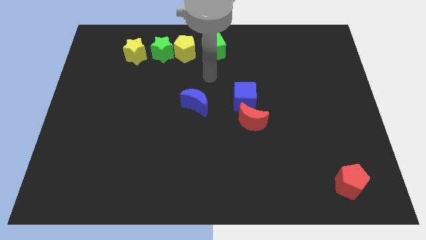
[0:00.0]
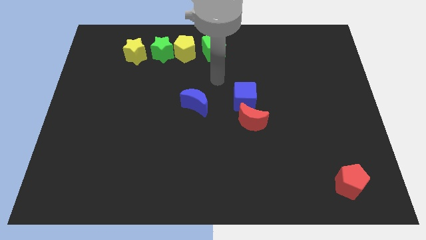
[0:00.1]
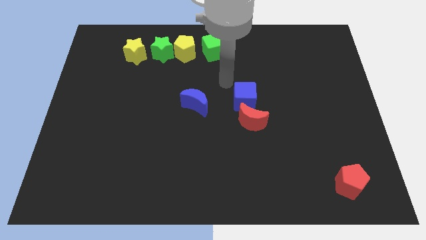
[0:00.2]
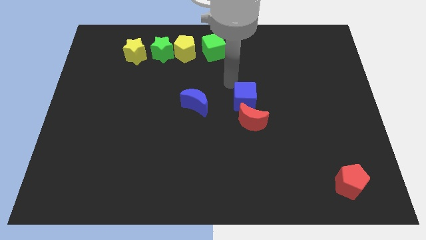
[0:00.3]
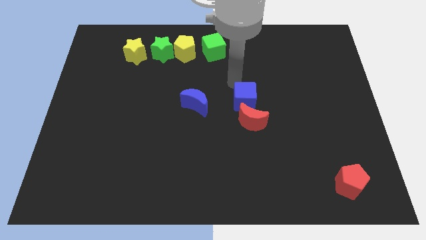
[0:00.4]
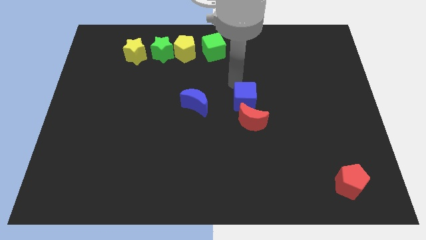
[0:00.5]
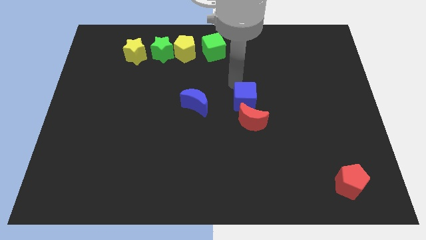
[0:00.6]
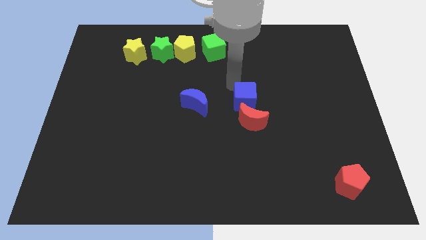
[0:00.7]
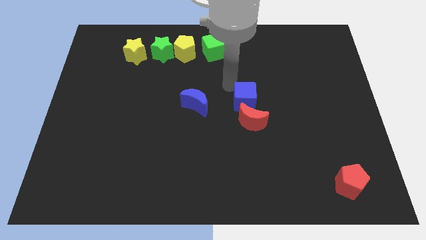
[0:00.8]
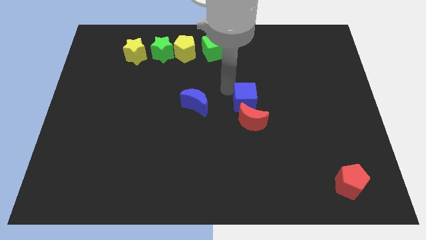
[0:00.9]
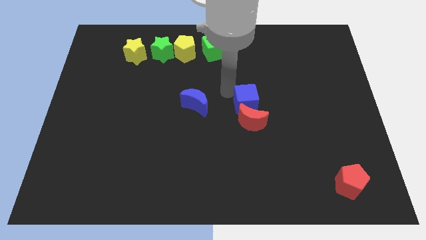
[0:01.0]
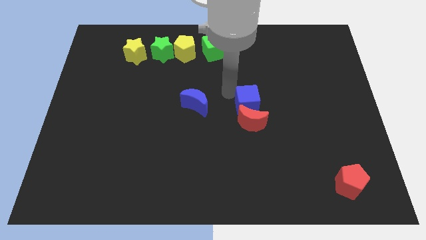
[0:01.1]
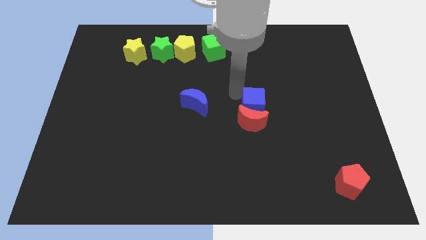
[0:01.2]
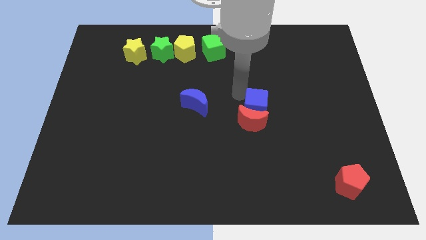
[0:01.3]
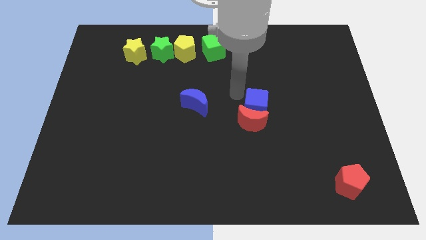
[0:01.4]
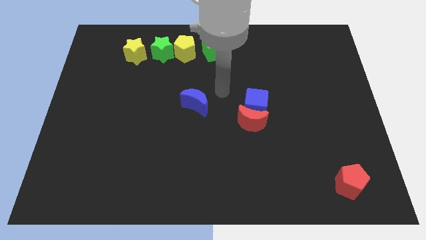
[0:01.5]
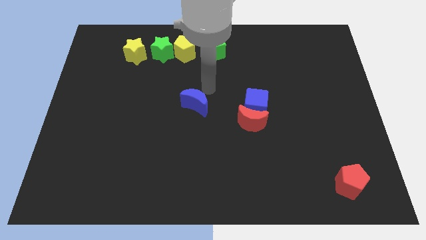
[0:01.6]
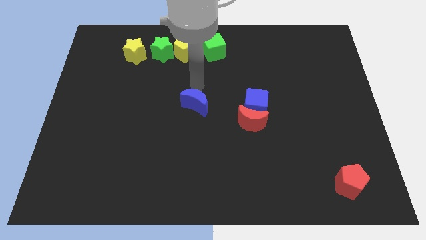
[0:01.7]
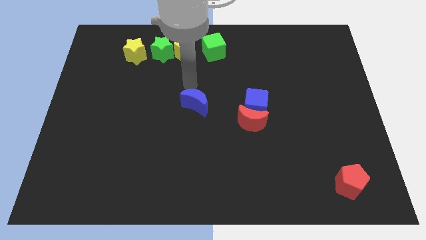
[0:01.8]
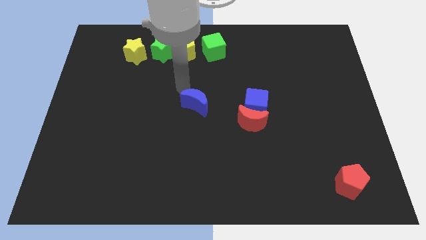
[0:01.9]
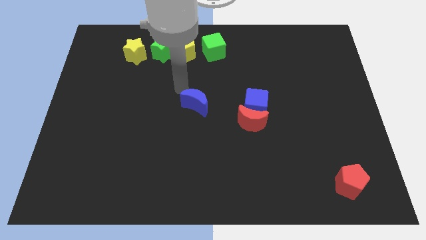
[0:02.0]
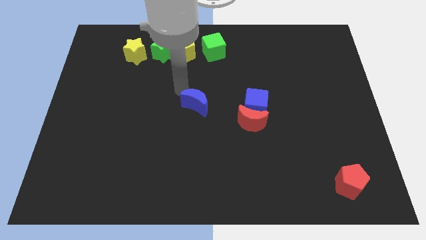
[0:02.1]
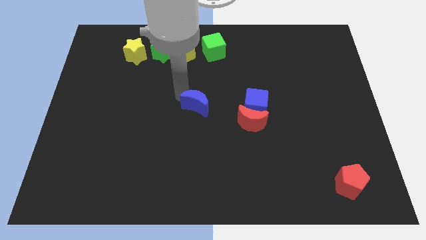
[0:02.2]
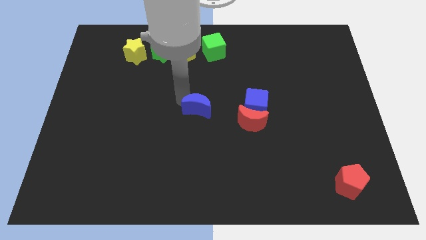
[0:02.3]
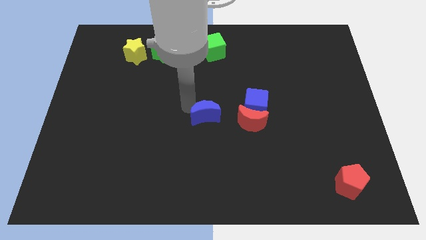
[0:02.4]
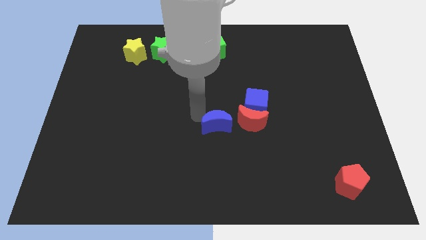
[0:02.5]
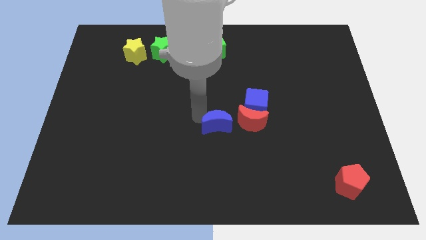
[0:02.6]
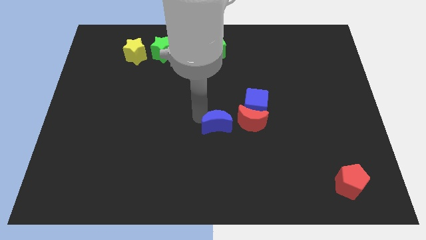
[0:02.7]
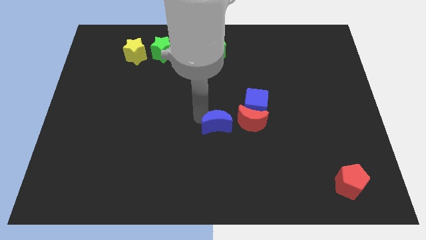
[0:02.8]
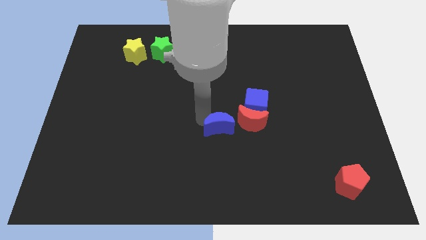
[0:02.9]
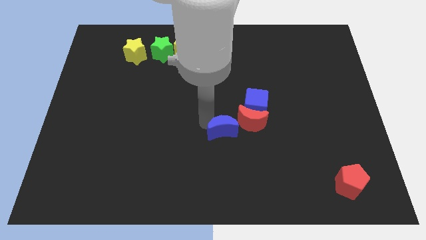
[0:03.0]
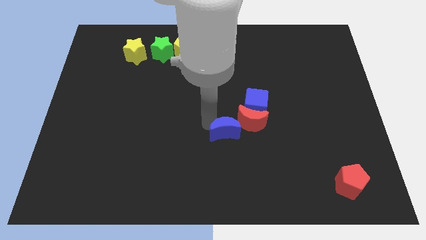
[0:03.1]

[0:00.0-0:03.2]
move the blue blocks towards the red crescent

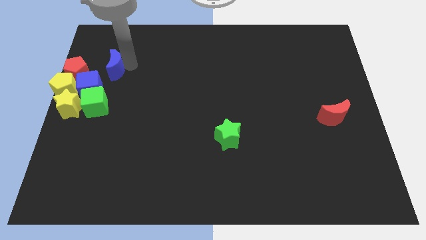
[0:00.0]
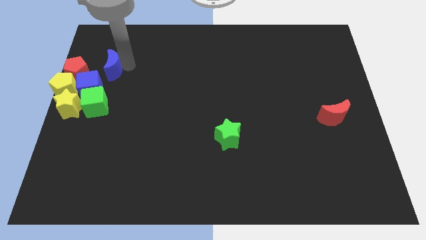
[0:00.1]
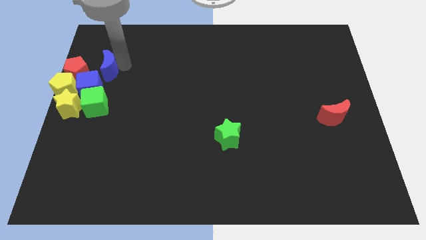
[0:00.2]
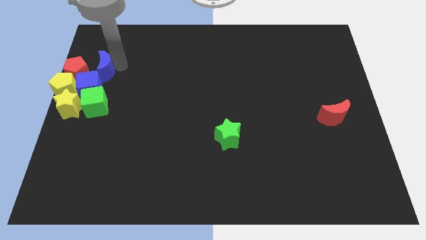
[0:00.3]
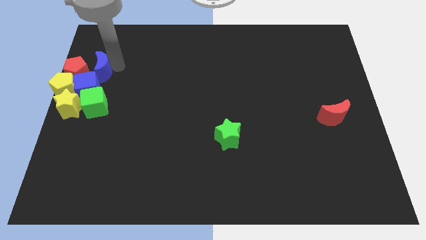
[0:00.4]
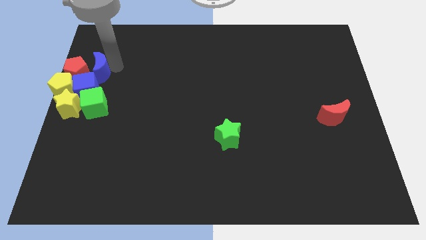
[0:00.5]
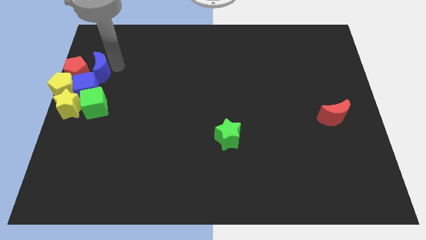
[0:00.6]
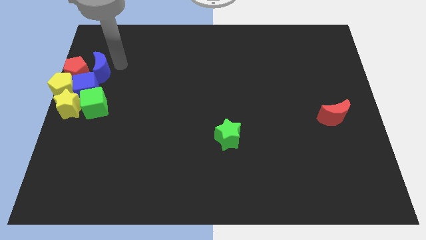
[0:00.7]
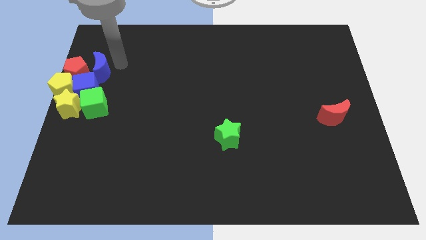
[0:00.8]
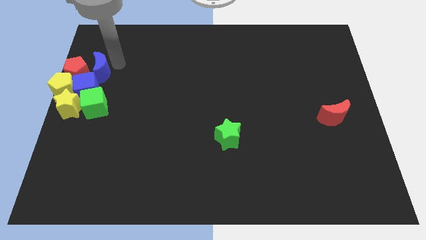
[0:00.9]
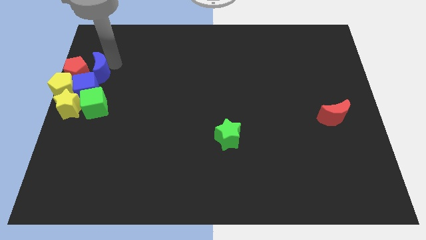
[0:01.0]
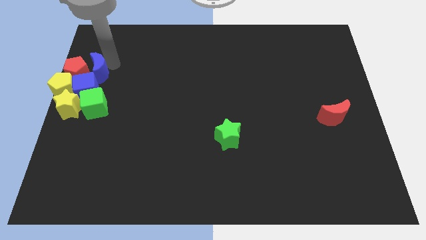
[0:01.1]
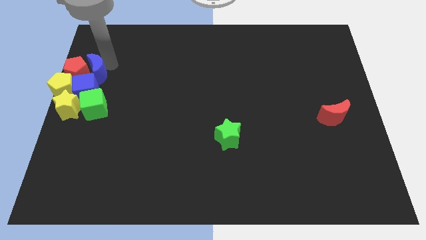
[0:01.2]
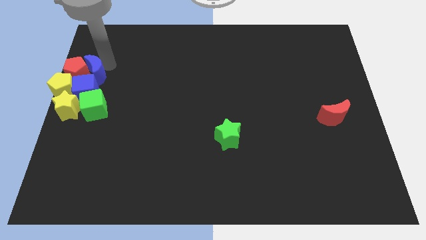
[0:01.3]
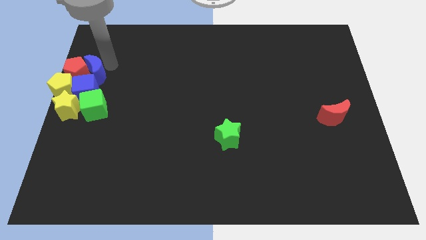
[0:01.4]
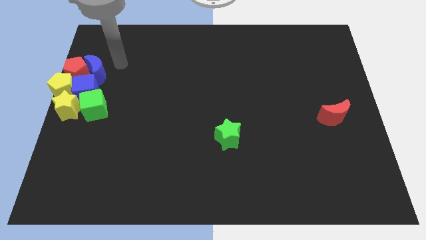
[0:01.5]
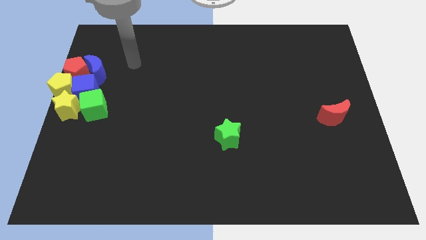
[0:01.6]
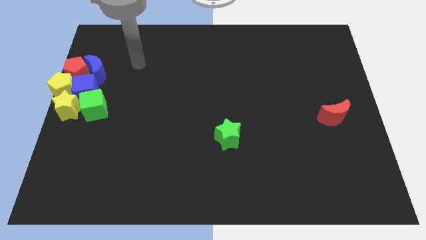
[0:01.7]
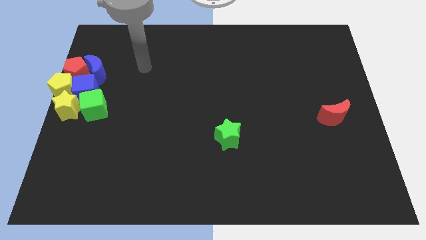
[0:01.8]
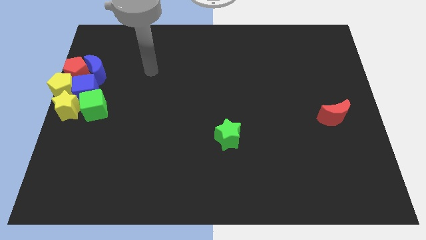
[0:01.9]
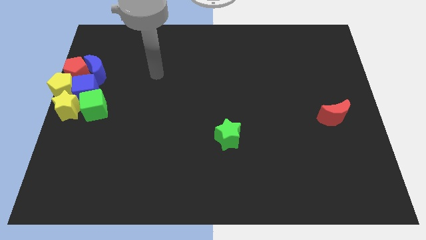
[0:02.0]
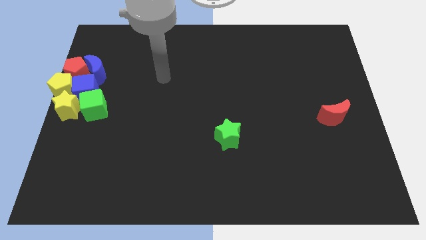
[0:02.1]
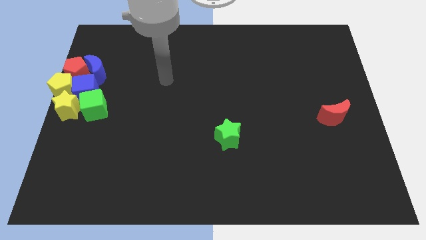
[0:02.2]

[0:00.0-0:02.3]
move the blue crescent near the red pentagon

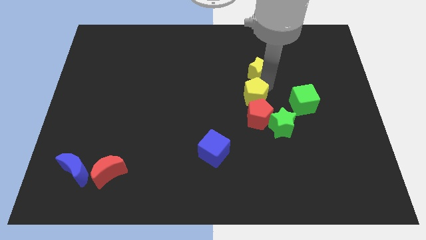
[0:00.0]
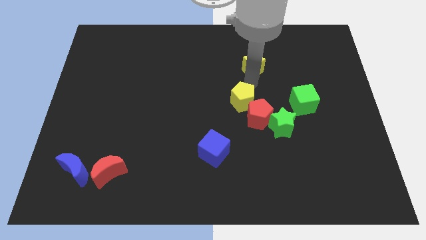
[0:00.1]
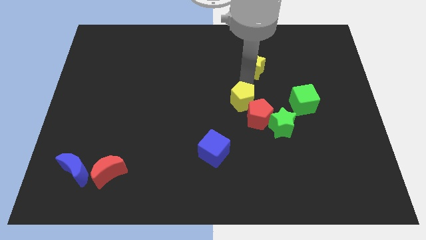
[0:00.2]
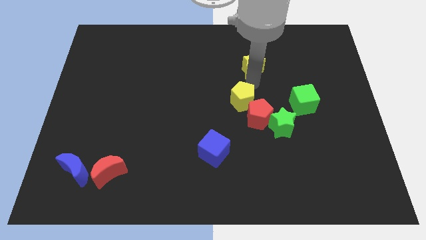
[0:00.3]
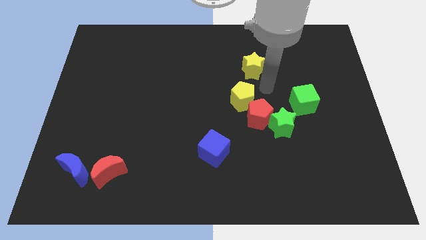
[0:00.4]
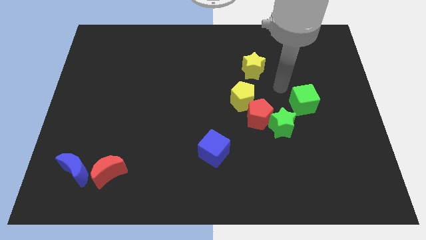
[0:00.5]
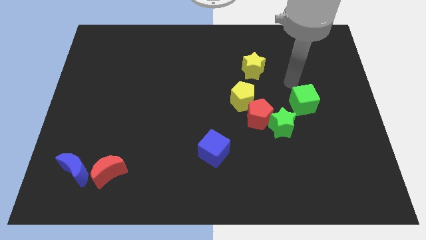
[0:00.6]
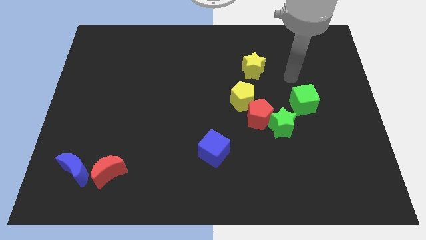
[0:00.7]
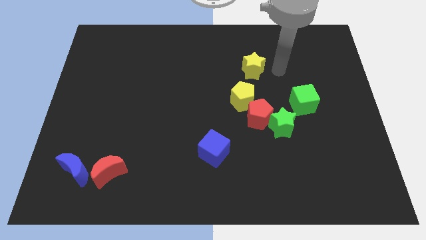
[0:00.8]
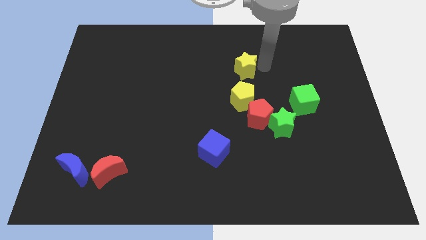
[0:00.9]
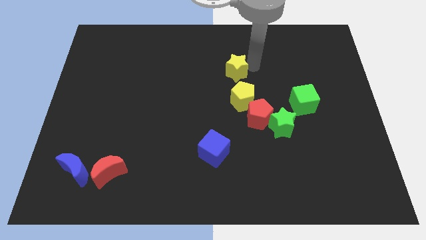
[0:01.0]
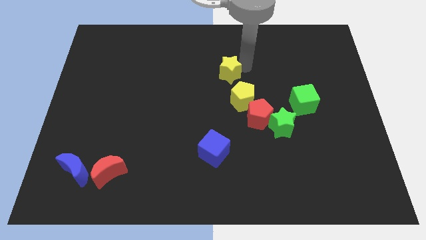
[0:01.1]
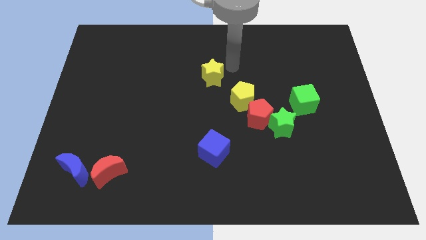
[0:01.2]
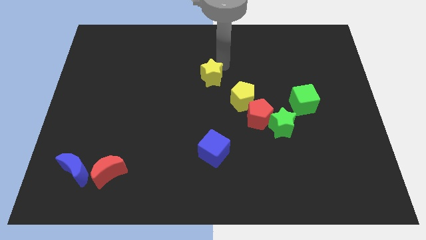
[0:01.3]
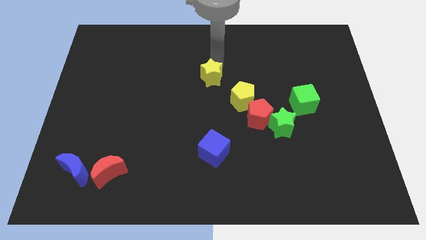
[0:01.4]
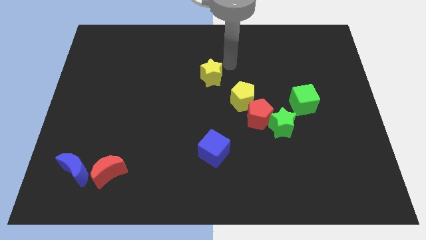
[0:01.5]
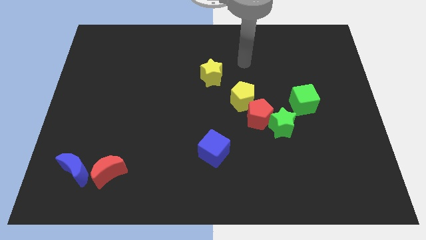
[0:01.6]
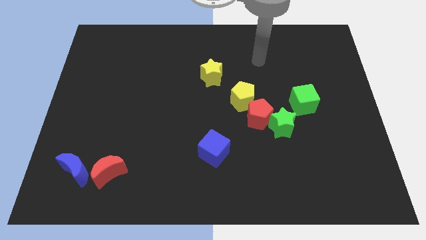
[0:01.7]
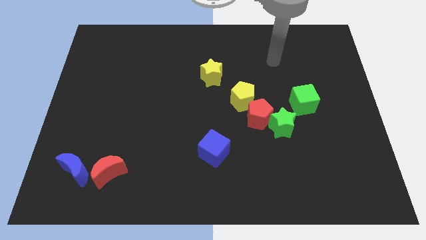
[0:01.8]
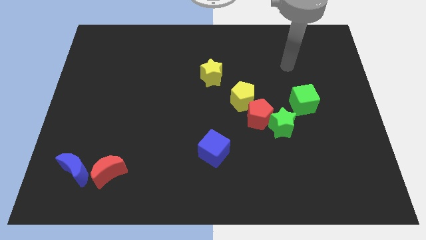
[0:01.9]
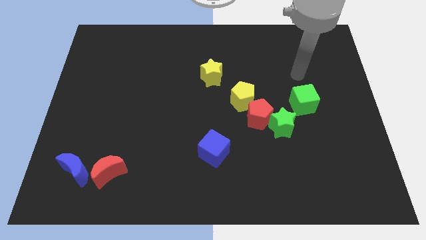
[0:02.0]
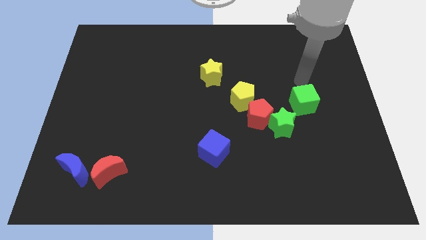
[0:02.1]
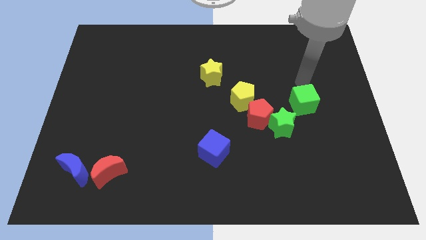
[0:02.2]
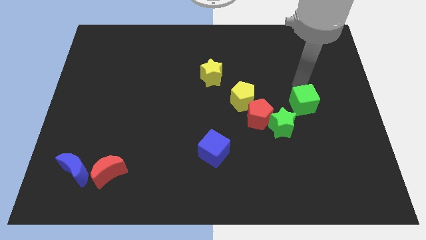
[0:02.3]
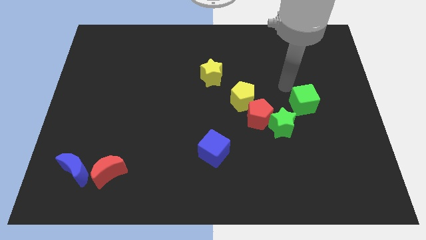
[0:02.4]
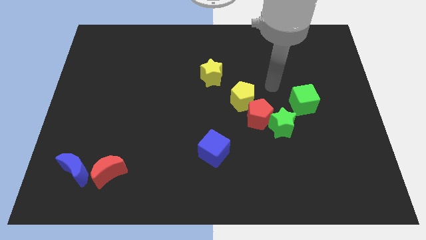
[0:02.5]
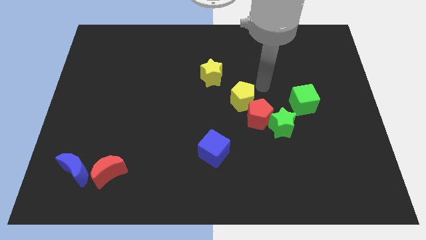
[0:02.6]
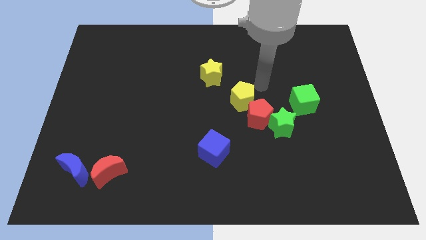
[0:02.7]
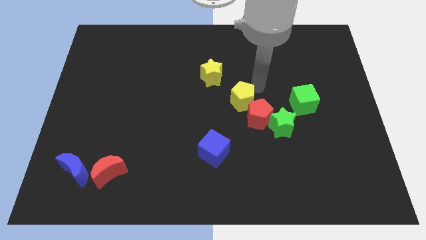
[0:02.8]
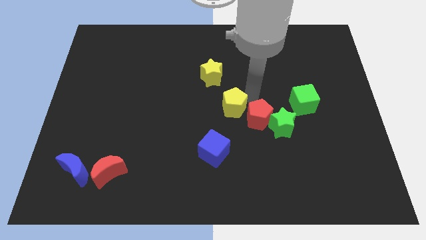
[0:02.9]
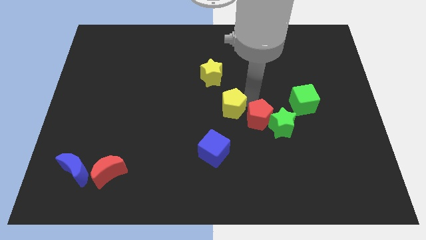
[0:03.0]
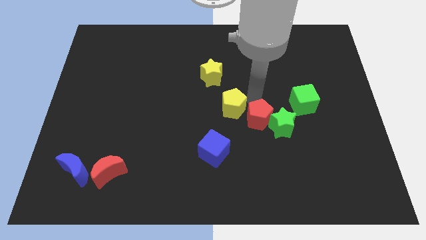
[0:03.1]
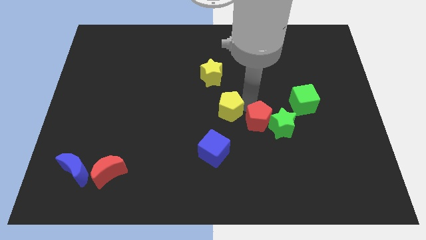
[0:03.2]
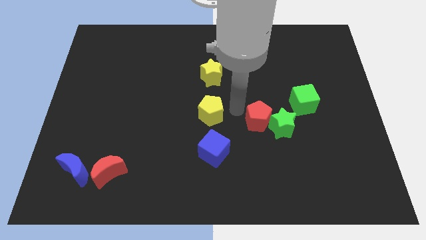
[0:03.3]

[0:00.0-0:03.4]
put the yellow pentagon between the blue cube and yellow star
